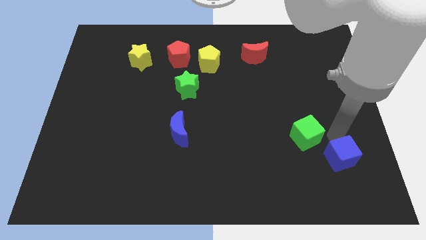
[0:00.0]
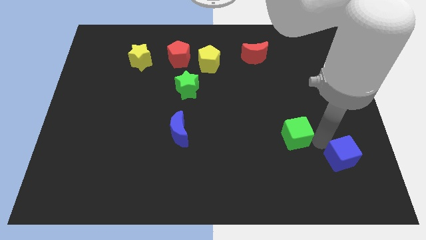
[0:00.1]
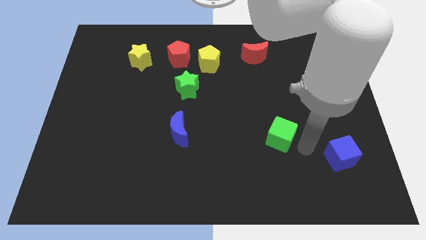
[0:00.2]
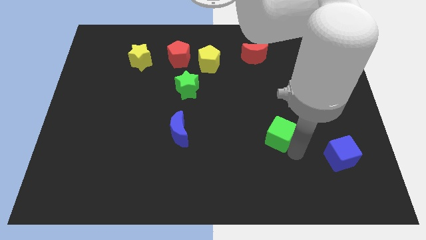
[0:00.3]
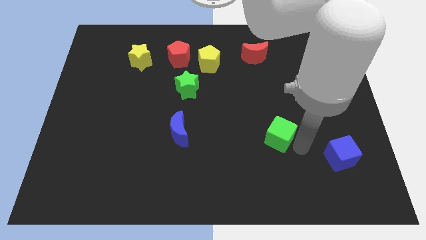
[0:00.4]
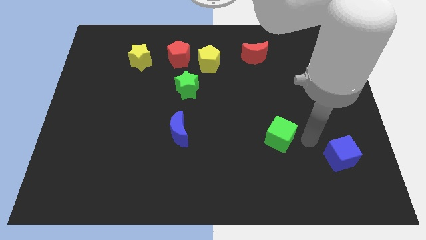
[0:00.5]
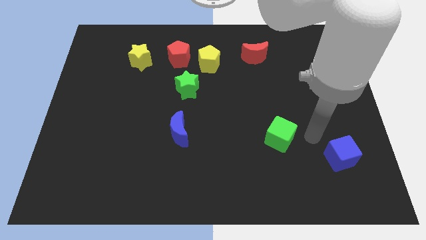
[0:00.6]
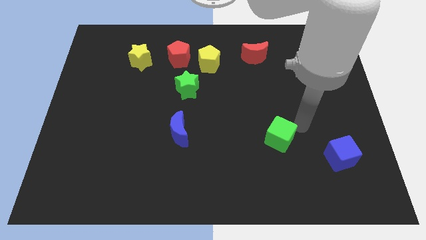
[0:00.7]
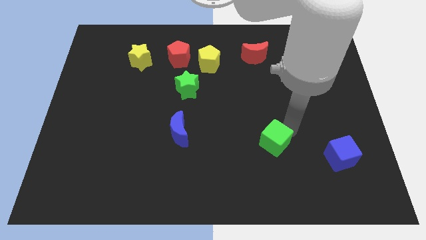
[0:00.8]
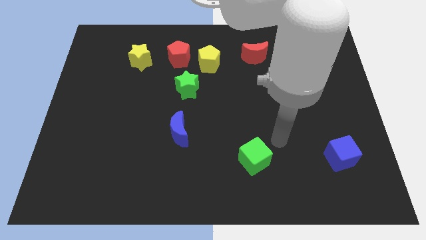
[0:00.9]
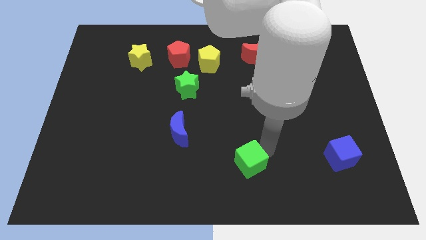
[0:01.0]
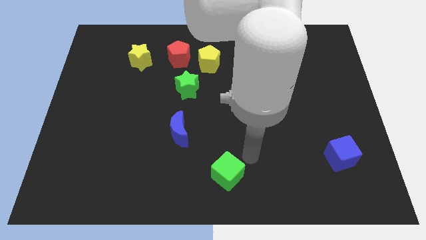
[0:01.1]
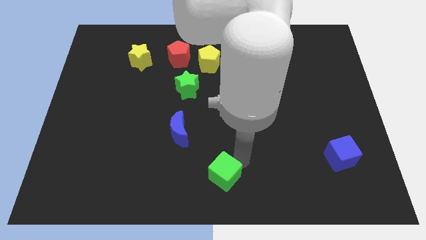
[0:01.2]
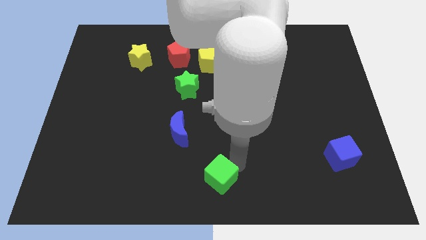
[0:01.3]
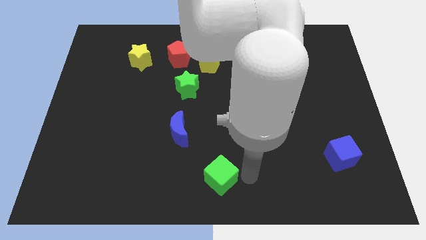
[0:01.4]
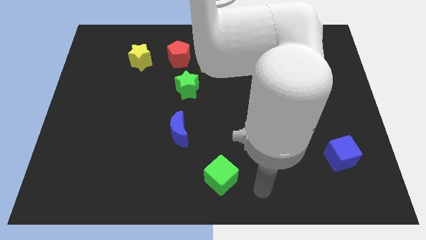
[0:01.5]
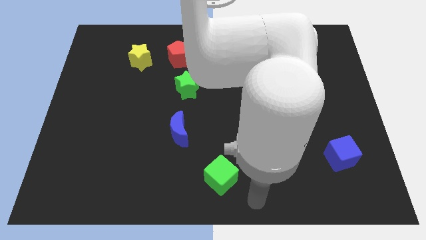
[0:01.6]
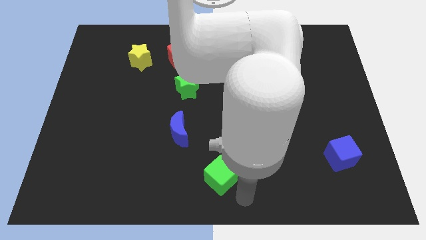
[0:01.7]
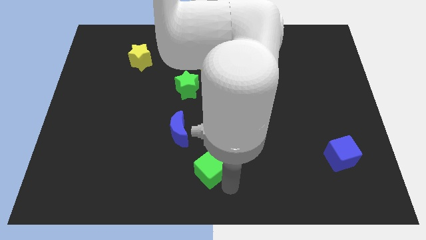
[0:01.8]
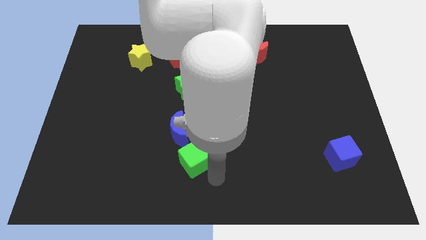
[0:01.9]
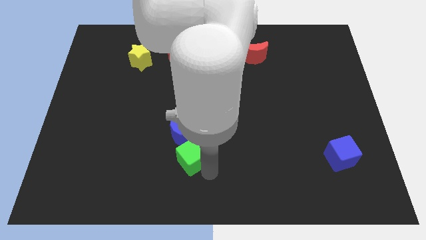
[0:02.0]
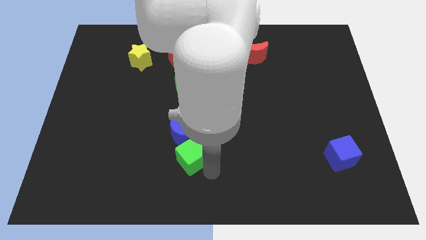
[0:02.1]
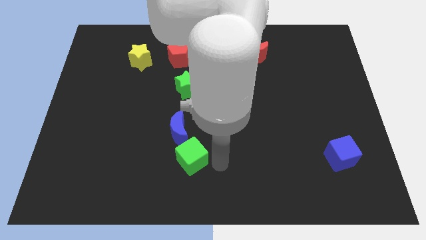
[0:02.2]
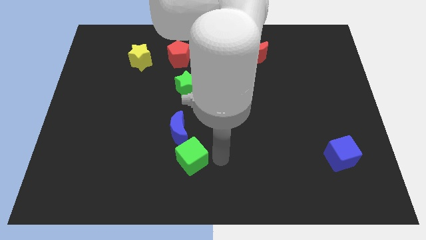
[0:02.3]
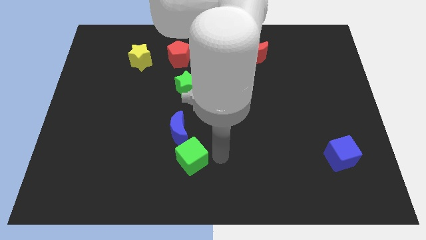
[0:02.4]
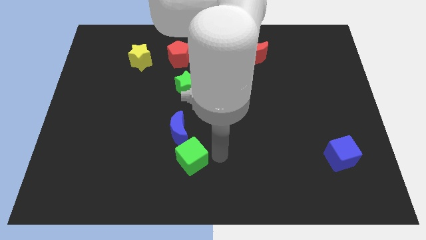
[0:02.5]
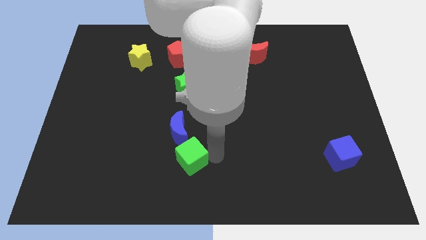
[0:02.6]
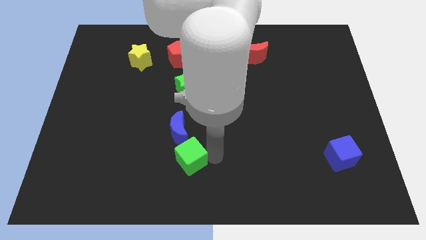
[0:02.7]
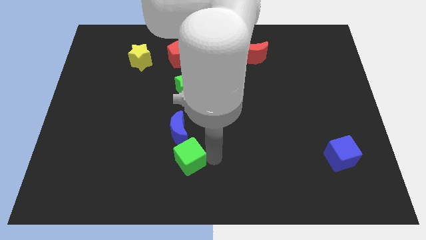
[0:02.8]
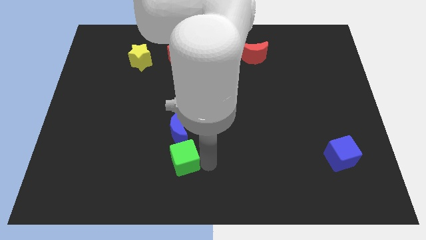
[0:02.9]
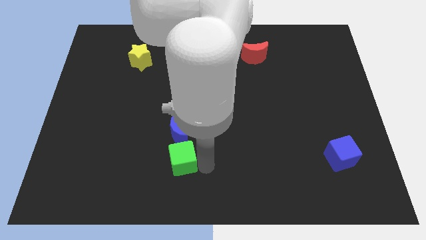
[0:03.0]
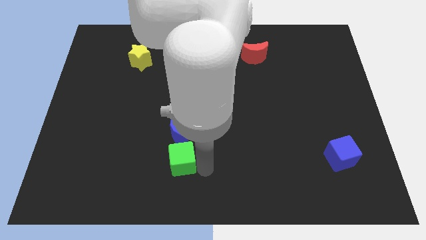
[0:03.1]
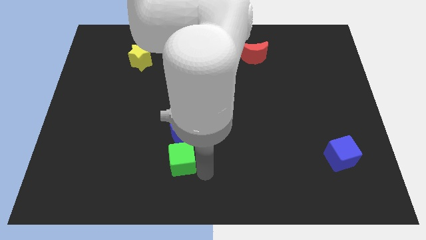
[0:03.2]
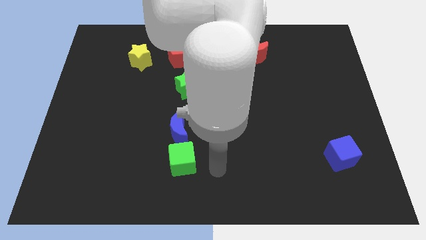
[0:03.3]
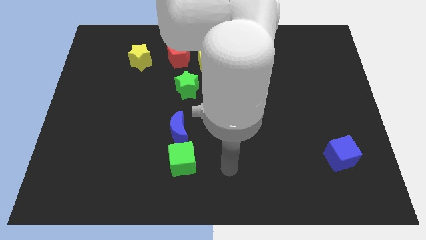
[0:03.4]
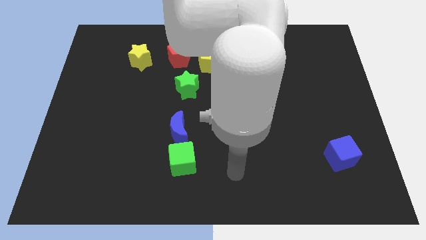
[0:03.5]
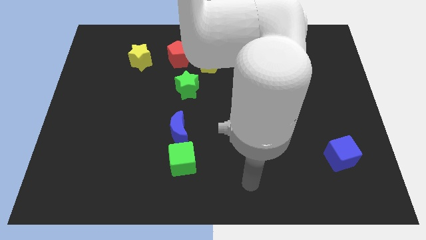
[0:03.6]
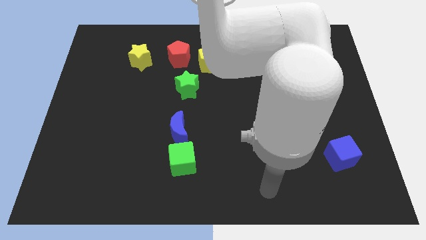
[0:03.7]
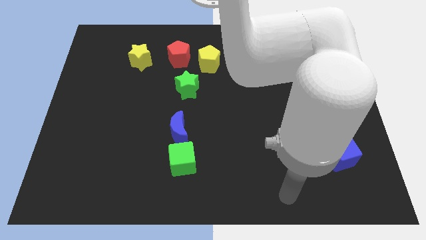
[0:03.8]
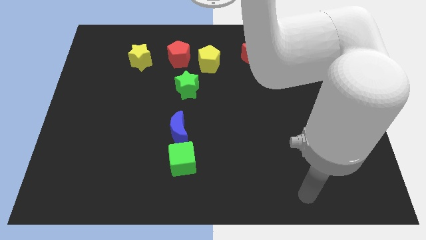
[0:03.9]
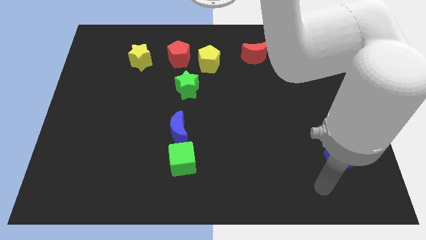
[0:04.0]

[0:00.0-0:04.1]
place the green cube below the blue crescent to form a vertical line

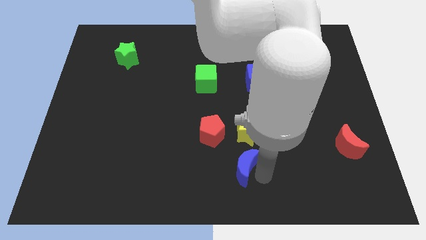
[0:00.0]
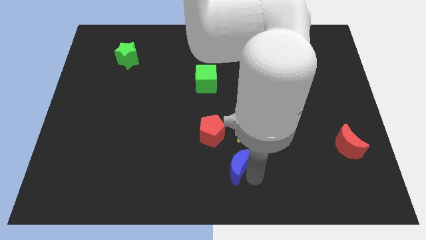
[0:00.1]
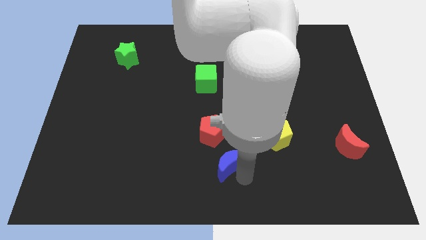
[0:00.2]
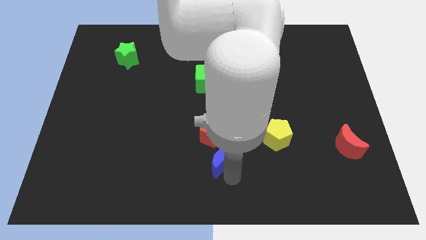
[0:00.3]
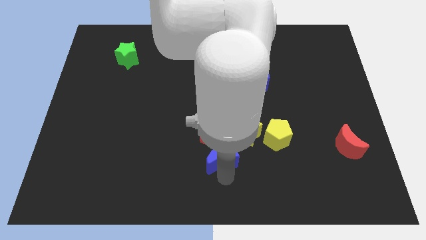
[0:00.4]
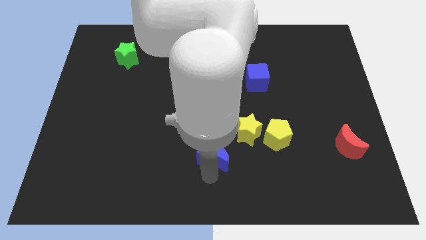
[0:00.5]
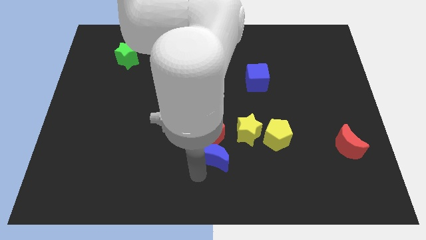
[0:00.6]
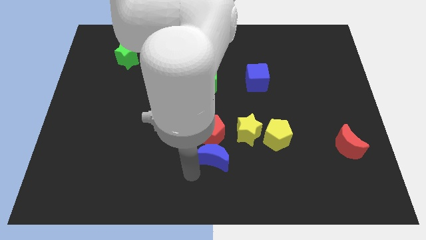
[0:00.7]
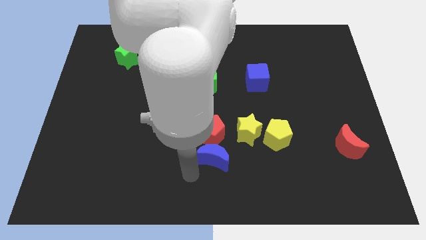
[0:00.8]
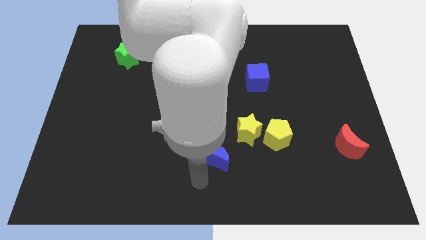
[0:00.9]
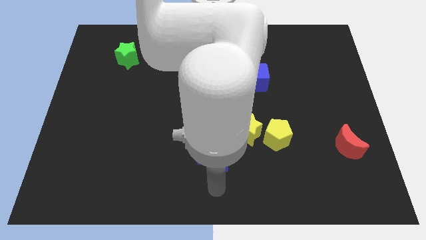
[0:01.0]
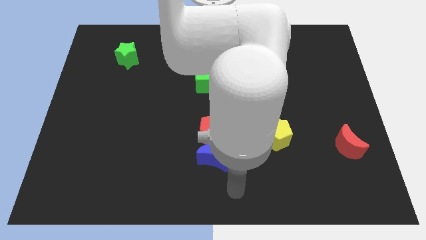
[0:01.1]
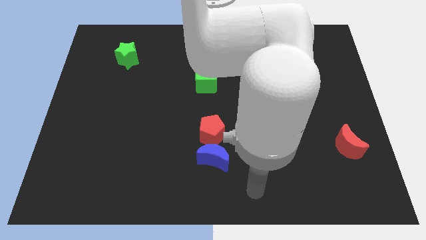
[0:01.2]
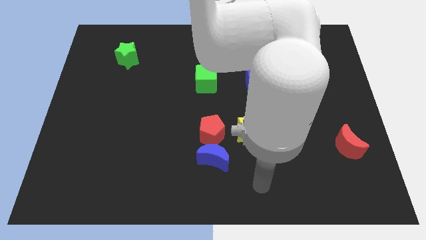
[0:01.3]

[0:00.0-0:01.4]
put the blue crescent at the bottom of the red pentagon

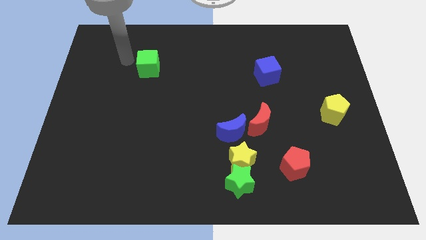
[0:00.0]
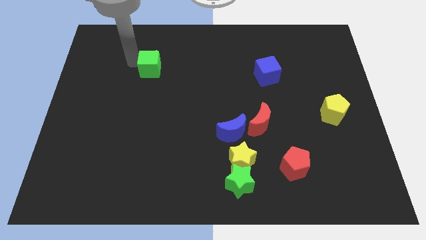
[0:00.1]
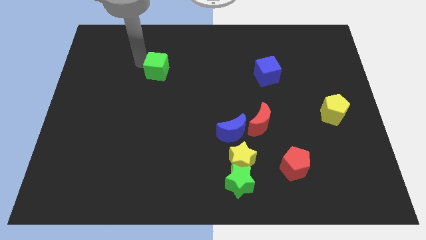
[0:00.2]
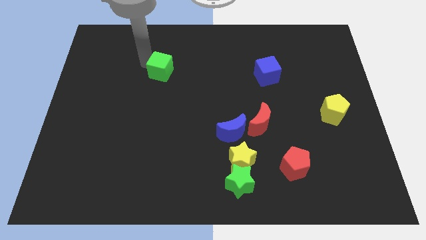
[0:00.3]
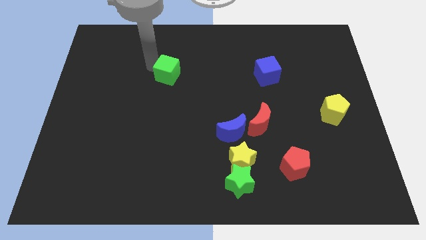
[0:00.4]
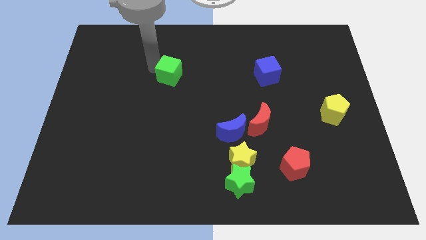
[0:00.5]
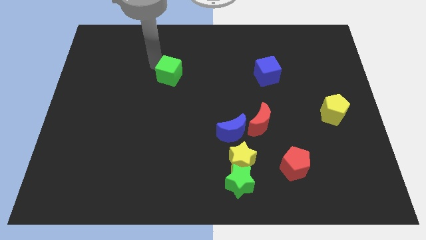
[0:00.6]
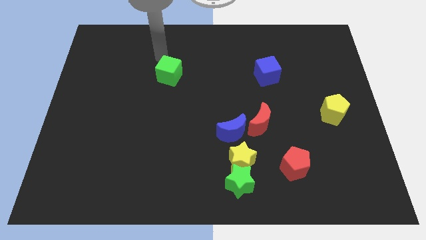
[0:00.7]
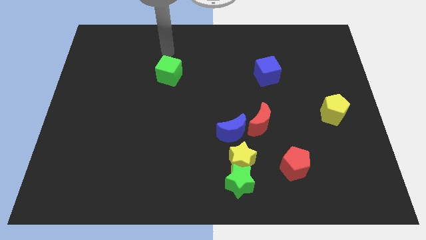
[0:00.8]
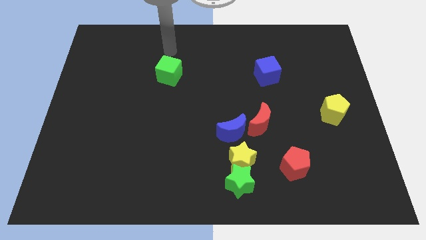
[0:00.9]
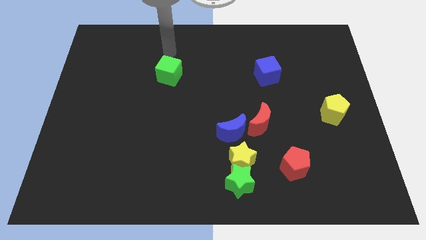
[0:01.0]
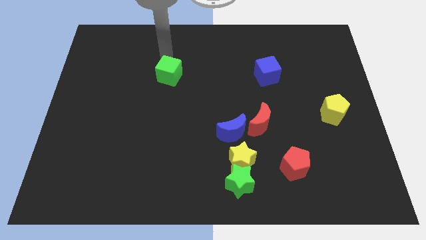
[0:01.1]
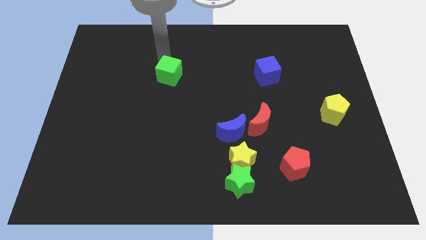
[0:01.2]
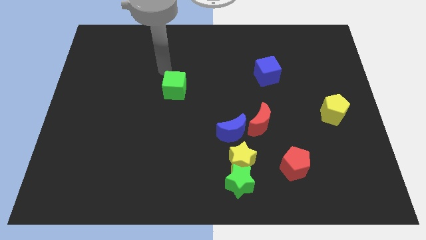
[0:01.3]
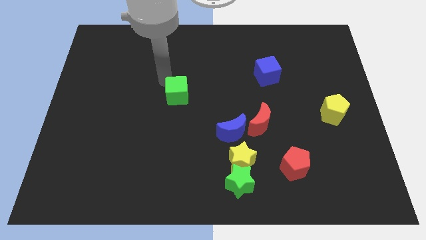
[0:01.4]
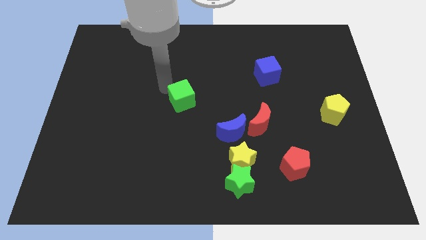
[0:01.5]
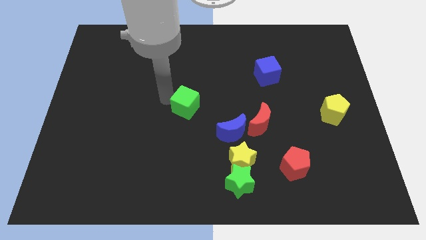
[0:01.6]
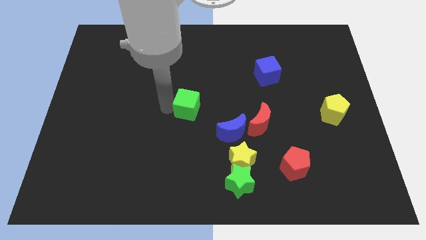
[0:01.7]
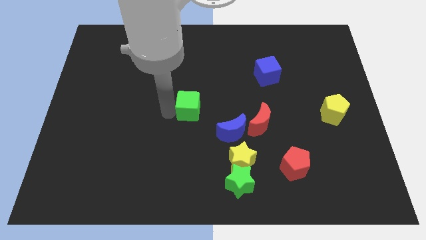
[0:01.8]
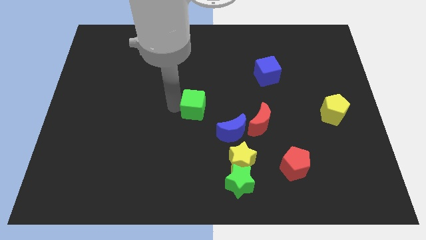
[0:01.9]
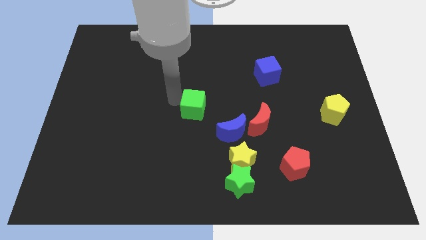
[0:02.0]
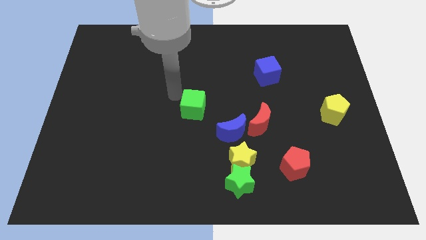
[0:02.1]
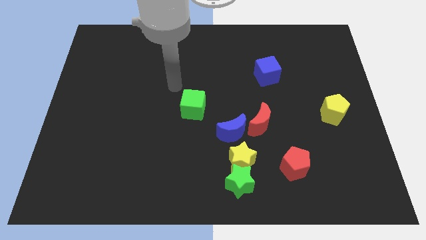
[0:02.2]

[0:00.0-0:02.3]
place the green cube at center of the board

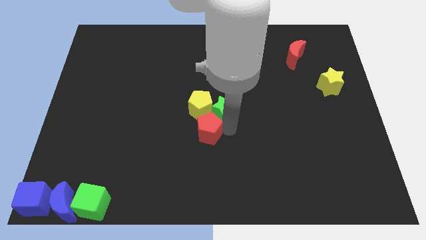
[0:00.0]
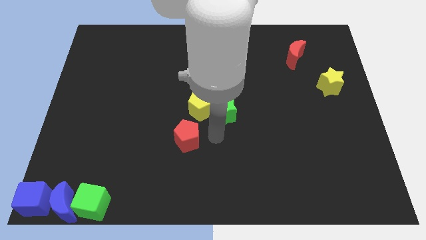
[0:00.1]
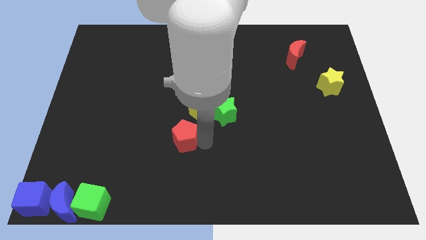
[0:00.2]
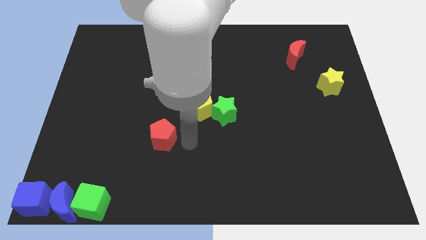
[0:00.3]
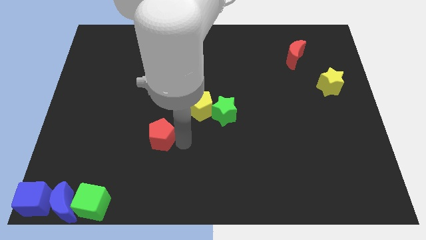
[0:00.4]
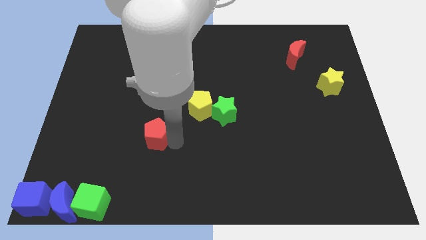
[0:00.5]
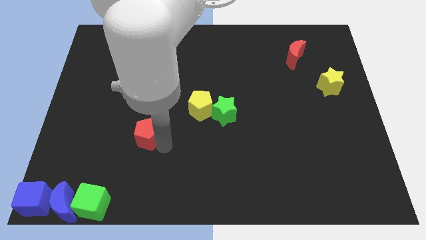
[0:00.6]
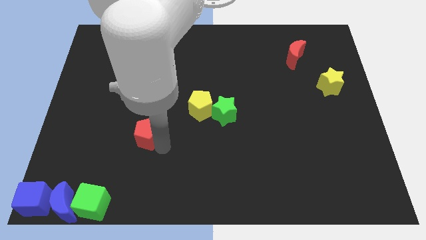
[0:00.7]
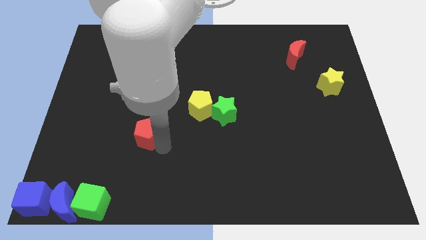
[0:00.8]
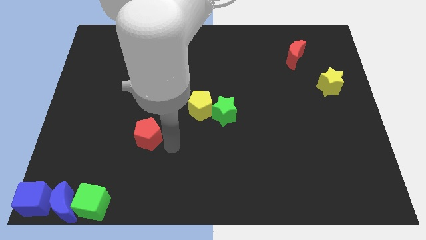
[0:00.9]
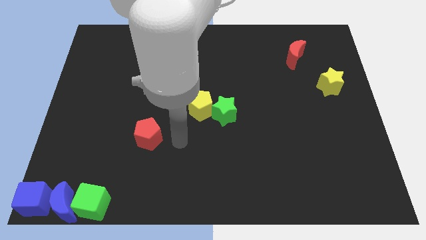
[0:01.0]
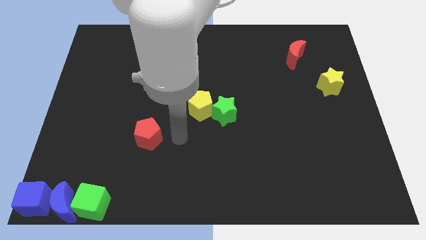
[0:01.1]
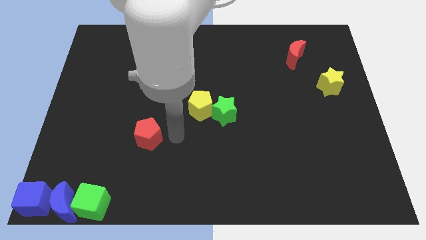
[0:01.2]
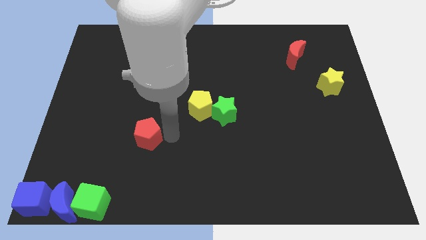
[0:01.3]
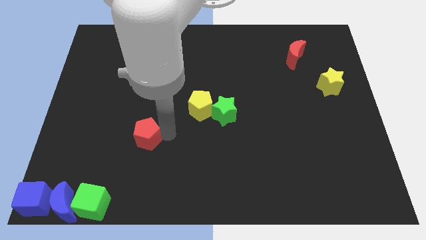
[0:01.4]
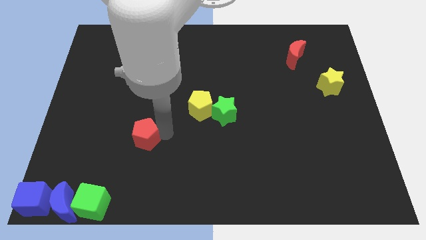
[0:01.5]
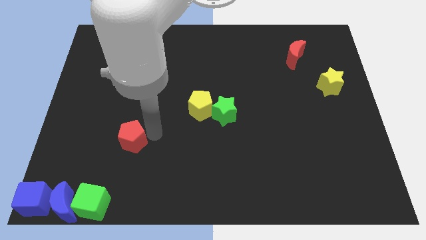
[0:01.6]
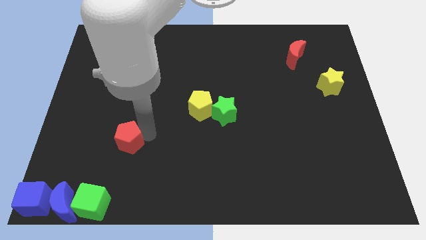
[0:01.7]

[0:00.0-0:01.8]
separate the red pentagon from the group of blocks
